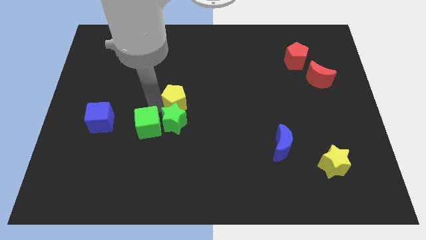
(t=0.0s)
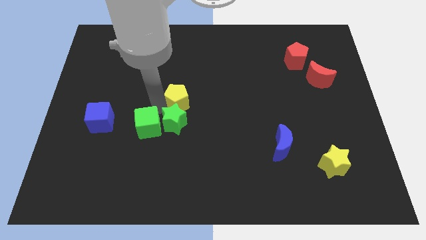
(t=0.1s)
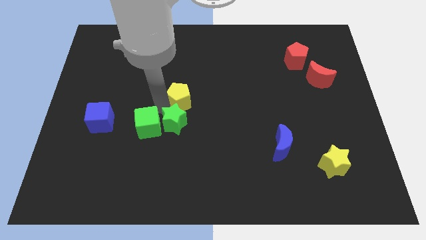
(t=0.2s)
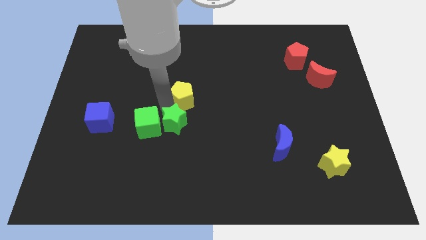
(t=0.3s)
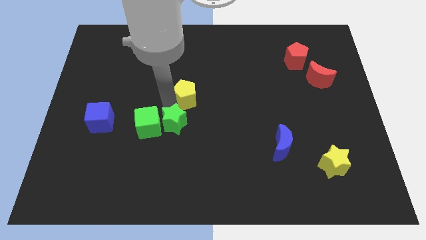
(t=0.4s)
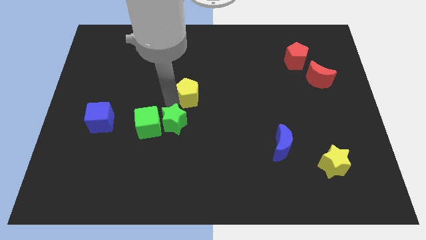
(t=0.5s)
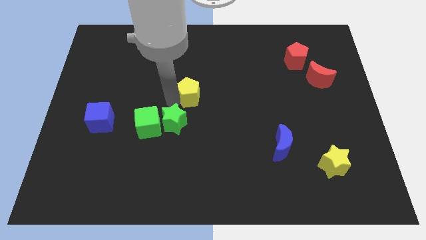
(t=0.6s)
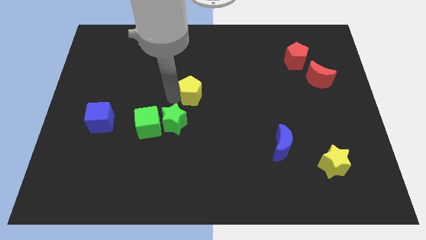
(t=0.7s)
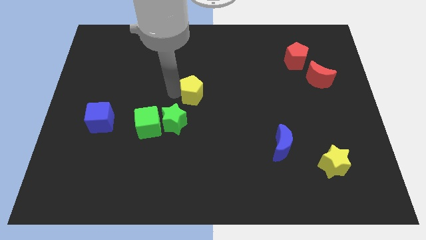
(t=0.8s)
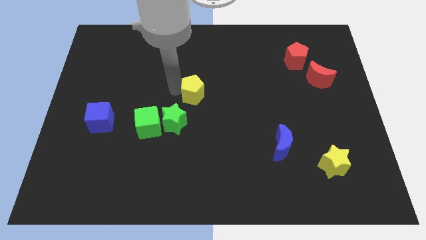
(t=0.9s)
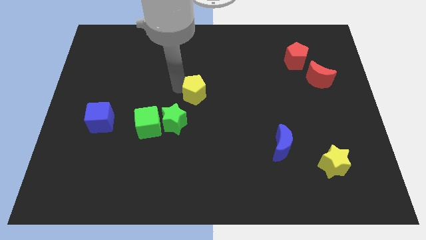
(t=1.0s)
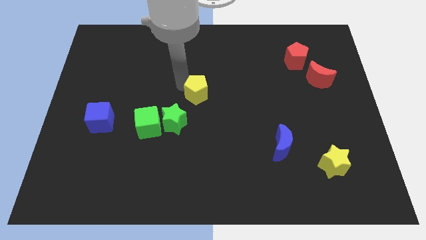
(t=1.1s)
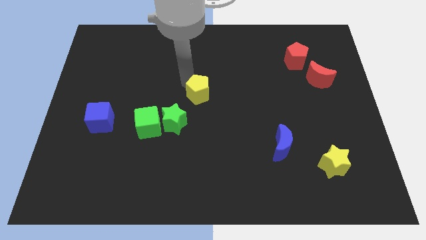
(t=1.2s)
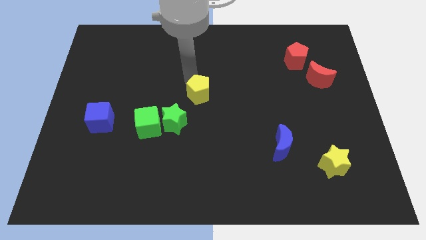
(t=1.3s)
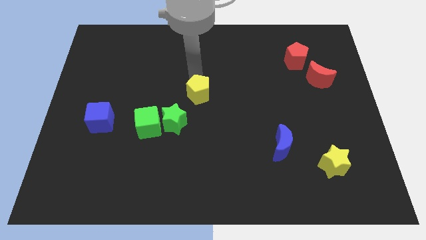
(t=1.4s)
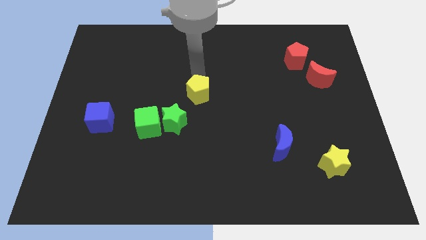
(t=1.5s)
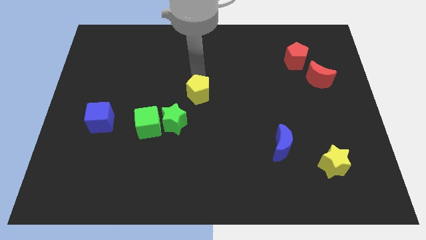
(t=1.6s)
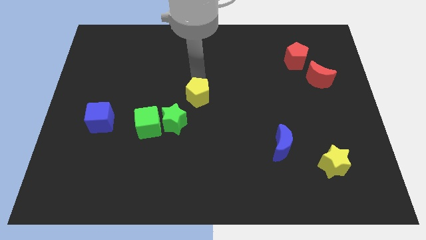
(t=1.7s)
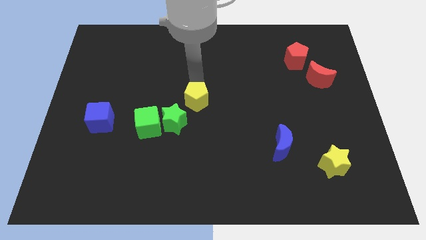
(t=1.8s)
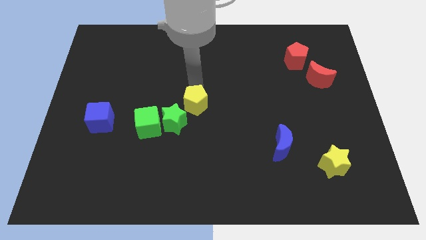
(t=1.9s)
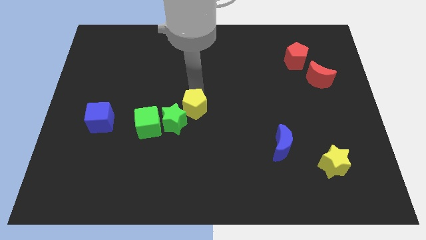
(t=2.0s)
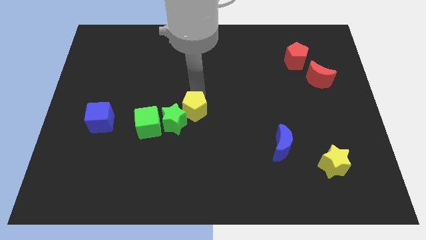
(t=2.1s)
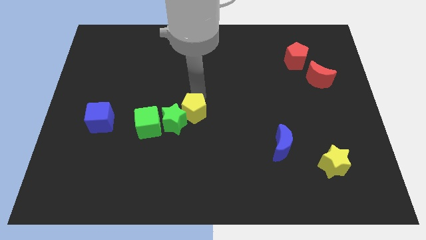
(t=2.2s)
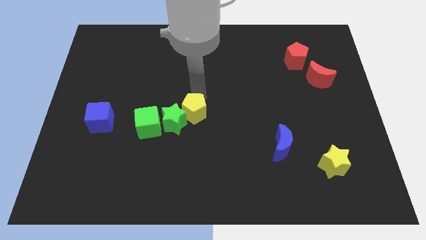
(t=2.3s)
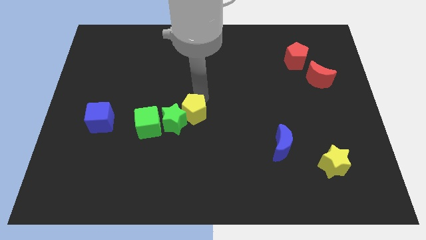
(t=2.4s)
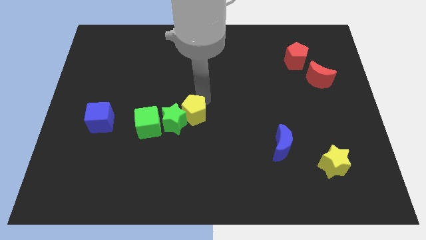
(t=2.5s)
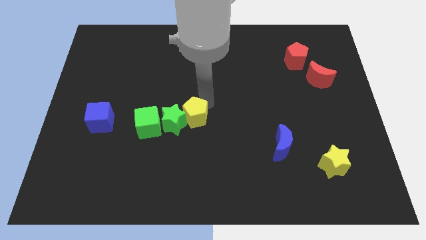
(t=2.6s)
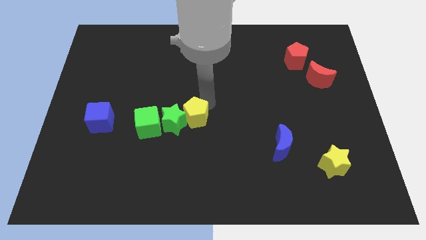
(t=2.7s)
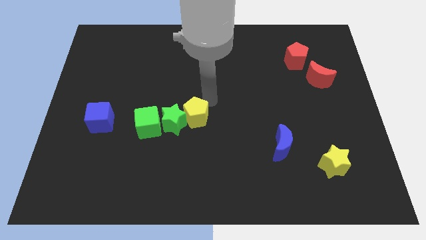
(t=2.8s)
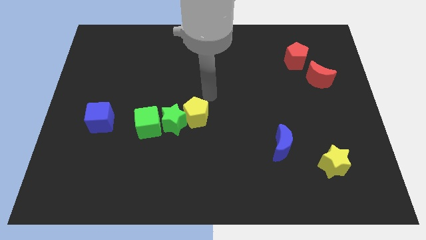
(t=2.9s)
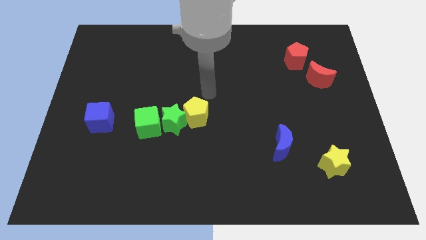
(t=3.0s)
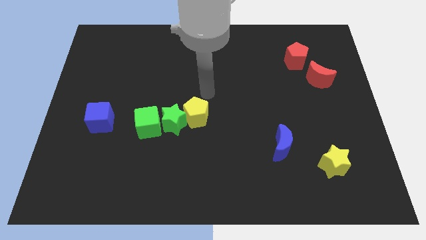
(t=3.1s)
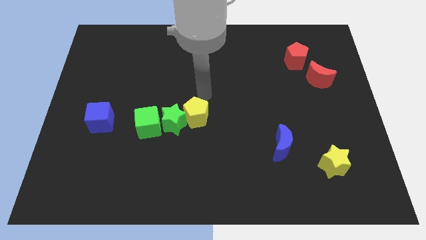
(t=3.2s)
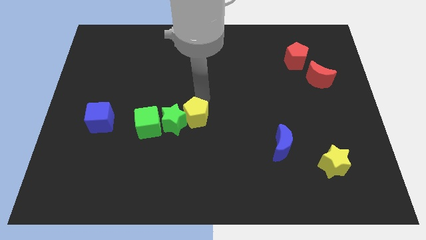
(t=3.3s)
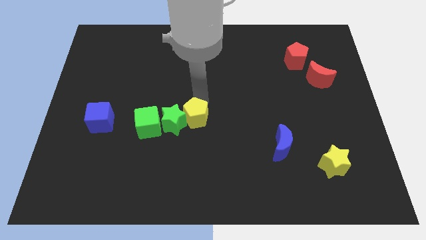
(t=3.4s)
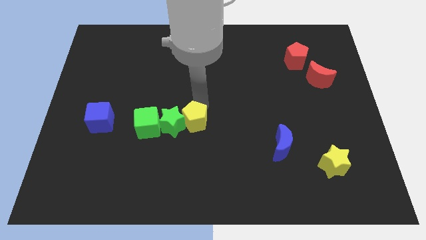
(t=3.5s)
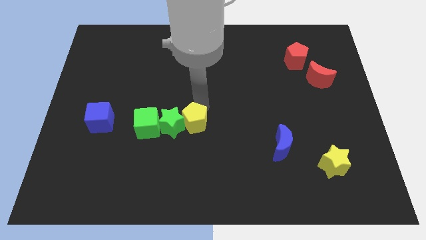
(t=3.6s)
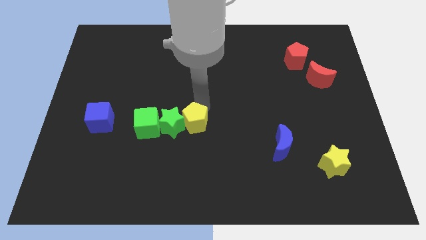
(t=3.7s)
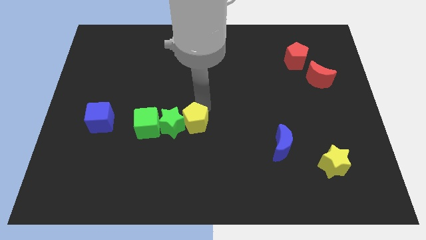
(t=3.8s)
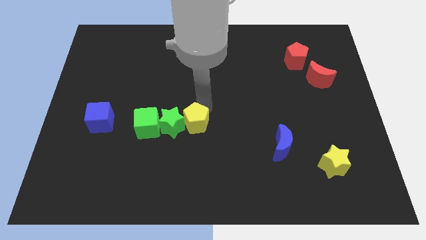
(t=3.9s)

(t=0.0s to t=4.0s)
place the yellow pentagon parallel right to the green star

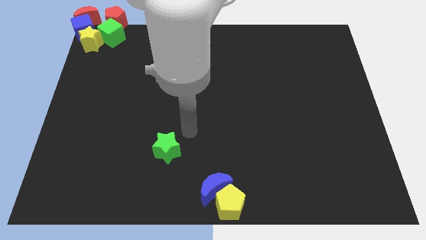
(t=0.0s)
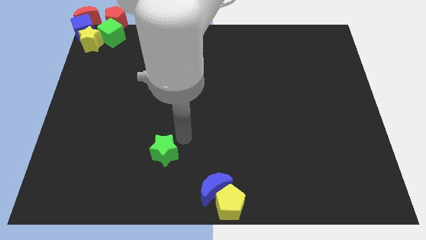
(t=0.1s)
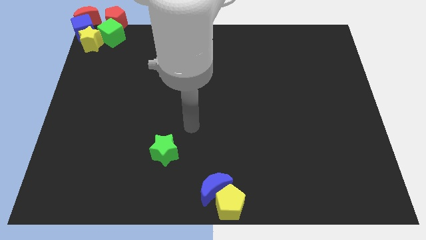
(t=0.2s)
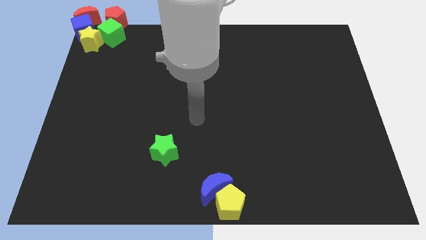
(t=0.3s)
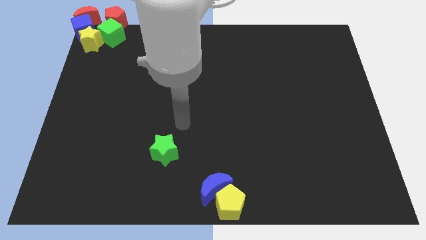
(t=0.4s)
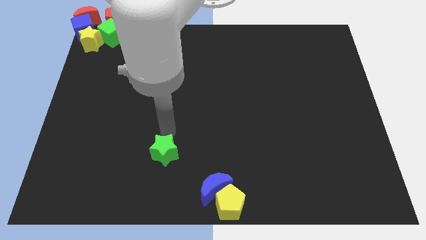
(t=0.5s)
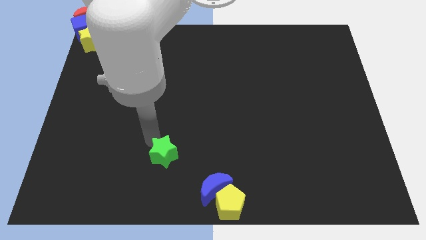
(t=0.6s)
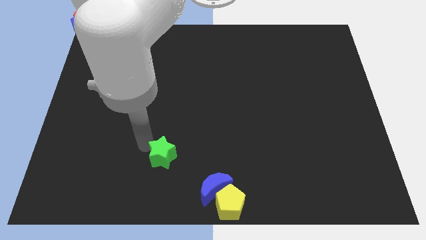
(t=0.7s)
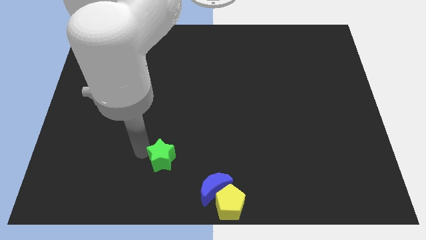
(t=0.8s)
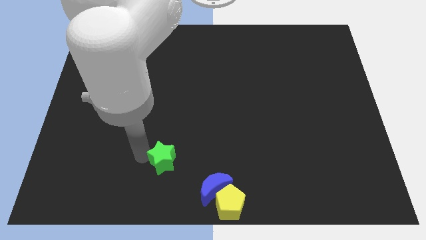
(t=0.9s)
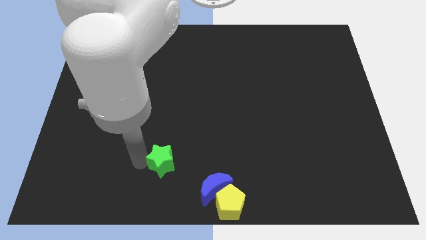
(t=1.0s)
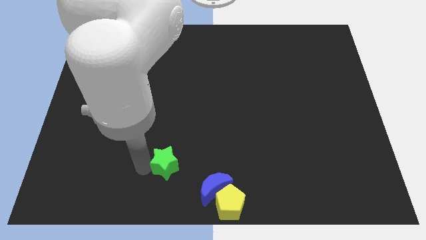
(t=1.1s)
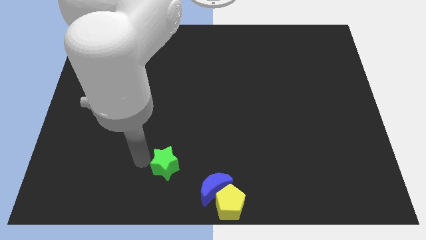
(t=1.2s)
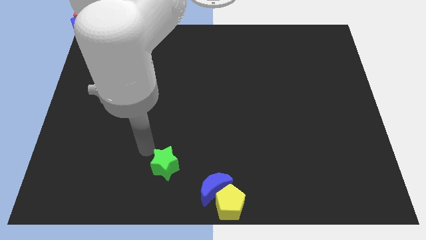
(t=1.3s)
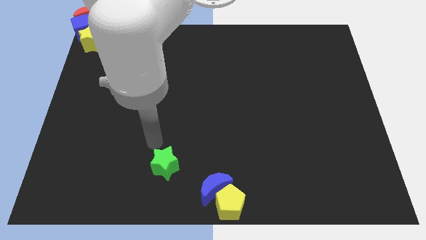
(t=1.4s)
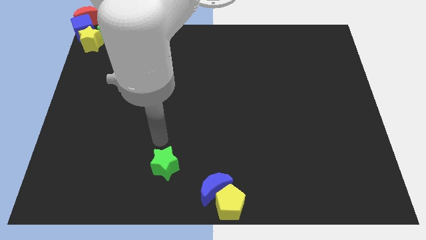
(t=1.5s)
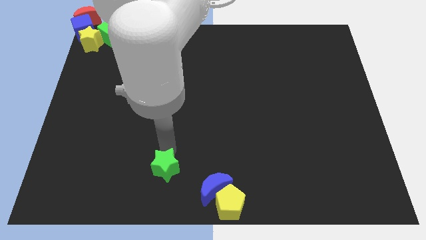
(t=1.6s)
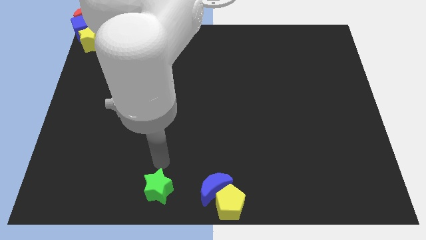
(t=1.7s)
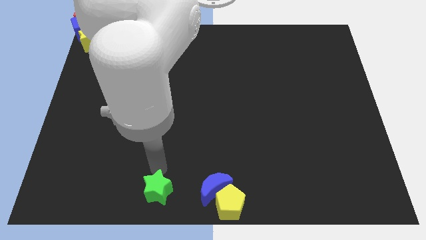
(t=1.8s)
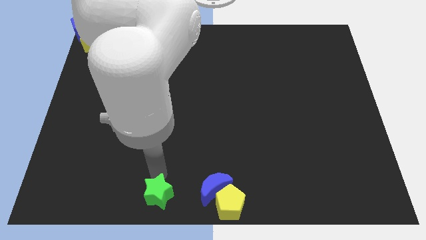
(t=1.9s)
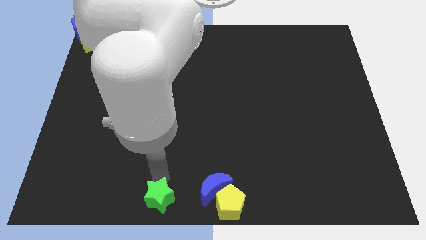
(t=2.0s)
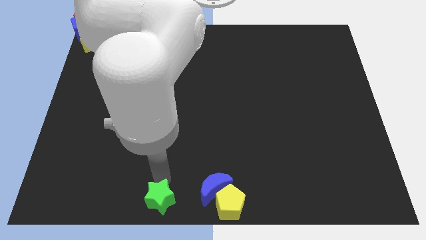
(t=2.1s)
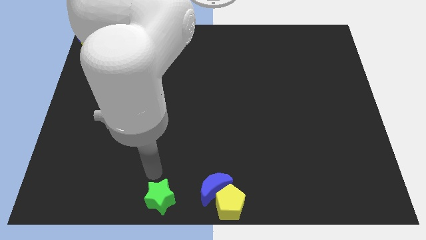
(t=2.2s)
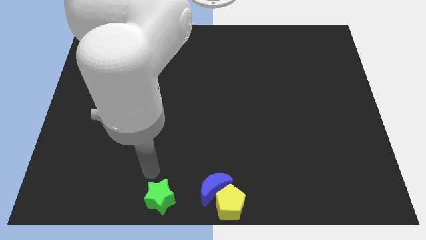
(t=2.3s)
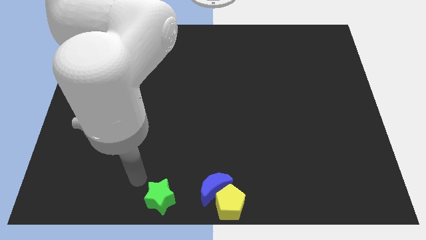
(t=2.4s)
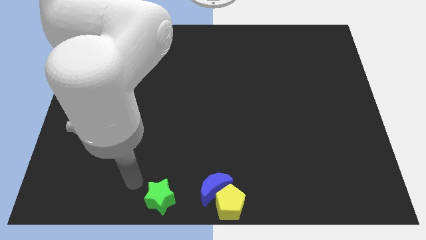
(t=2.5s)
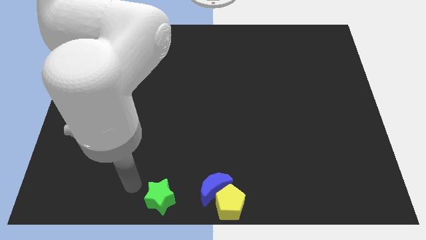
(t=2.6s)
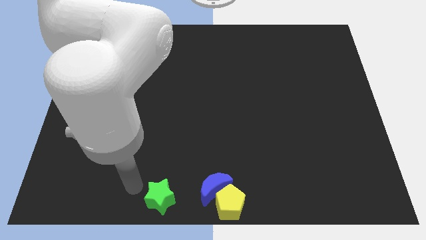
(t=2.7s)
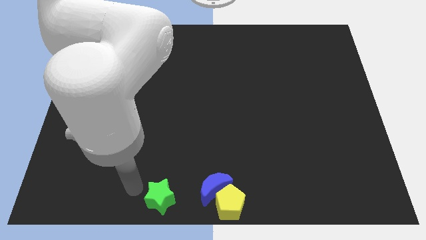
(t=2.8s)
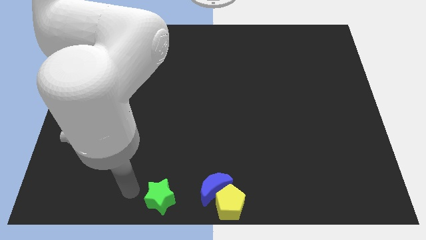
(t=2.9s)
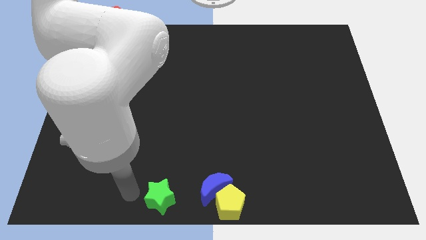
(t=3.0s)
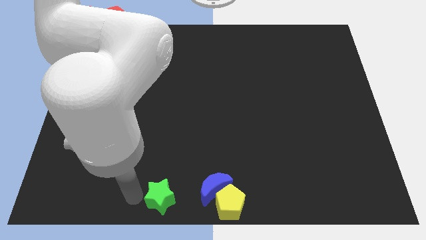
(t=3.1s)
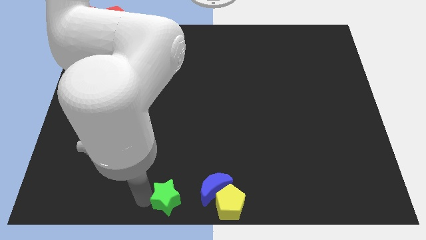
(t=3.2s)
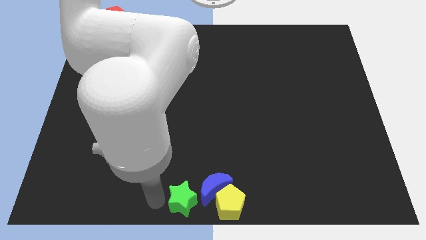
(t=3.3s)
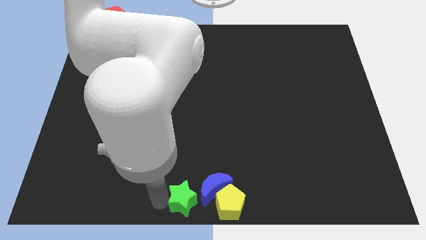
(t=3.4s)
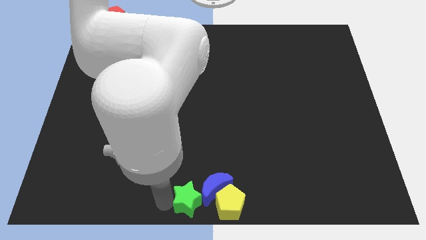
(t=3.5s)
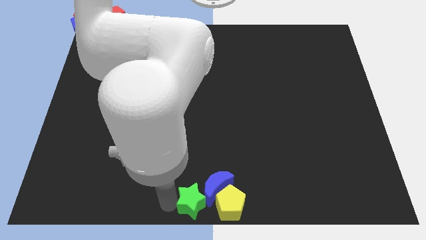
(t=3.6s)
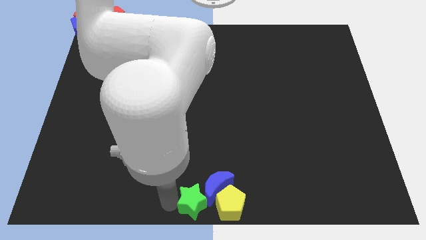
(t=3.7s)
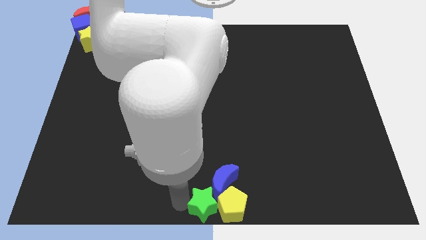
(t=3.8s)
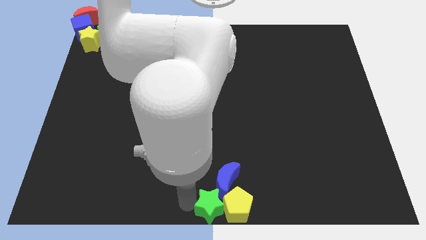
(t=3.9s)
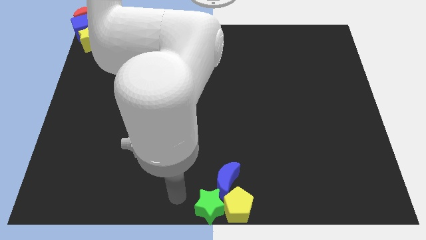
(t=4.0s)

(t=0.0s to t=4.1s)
move the green star into the group of blocks at the bottom center of the board

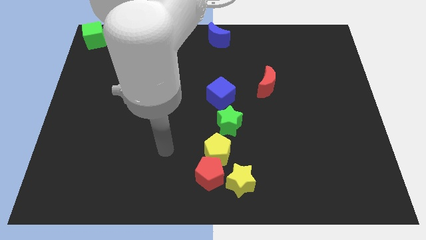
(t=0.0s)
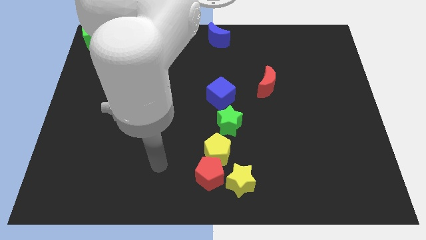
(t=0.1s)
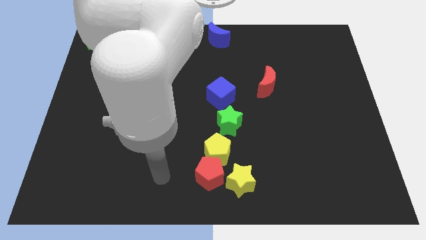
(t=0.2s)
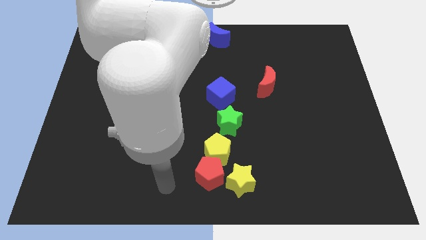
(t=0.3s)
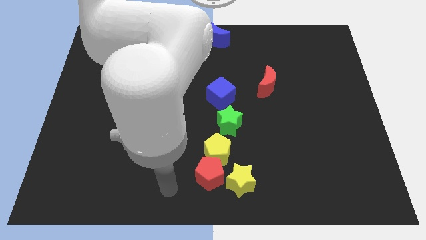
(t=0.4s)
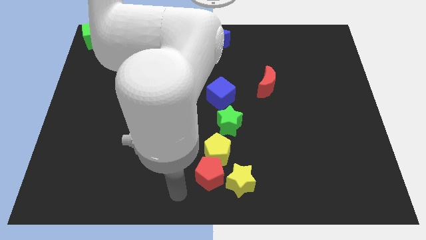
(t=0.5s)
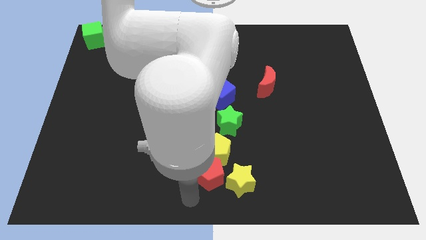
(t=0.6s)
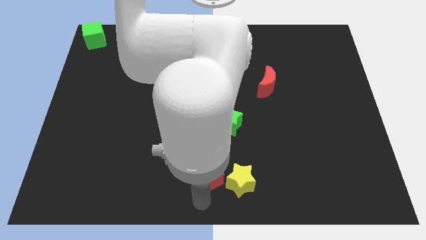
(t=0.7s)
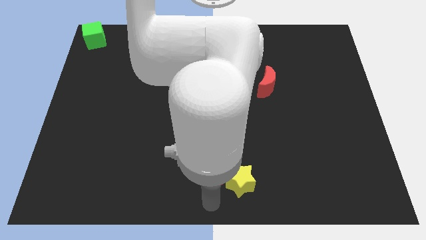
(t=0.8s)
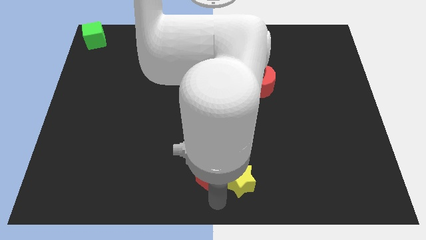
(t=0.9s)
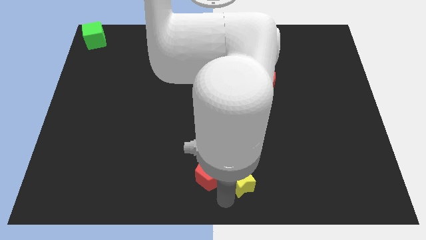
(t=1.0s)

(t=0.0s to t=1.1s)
touch the bottom of yellow star
